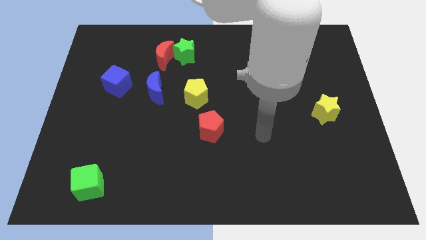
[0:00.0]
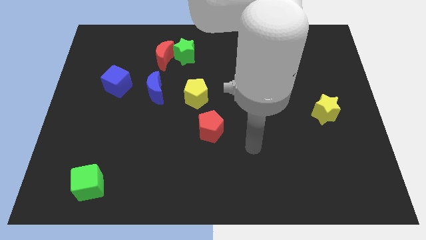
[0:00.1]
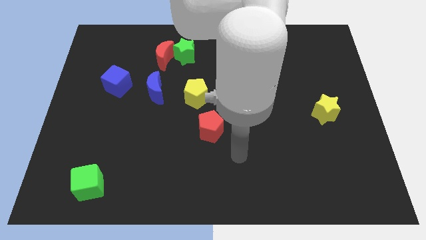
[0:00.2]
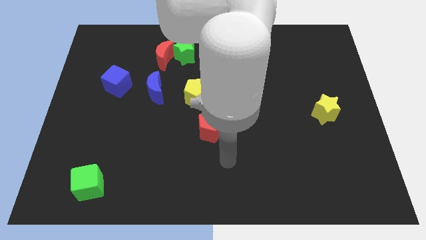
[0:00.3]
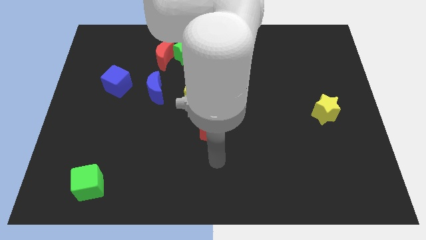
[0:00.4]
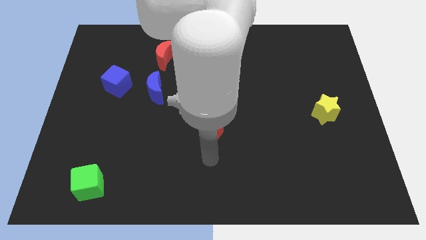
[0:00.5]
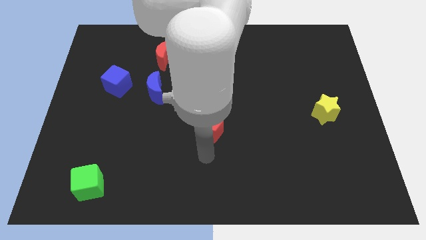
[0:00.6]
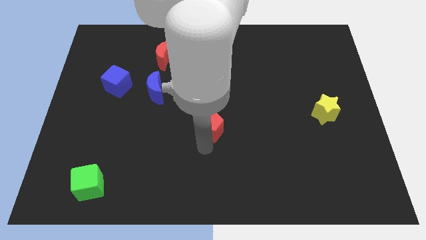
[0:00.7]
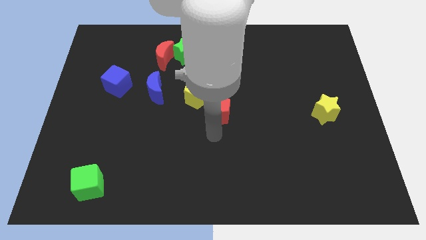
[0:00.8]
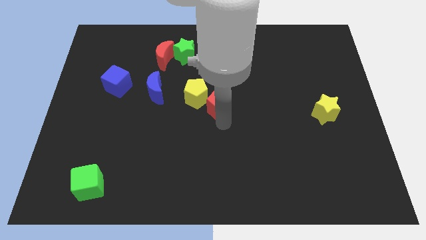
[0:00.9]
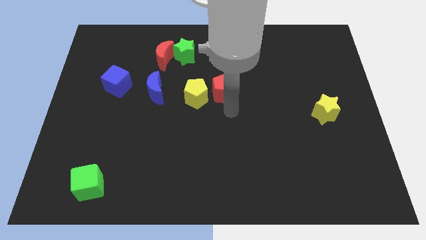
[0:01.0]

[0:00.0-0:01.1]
move the red pentagon to the right side of the yellow pentagon

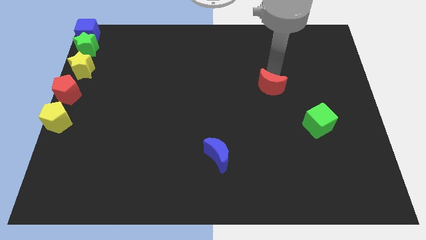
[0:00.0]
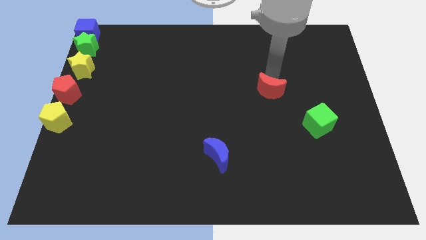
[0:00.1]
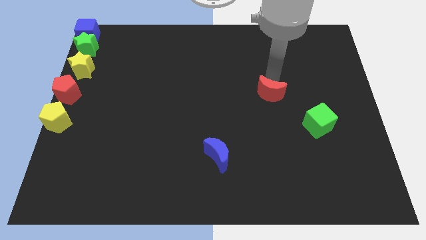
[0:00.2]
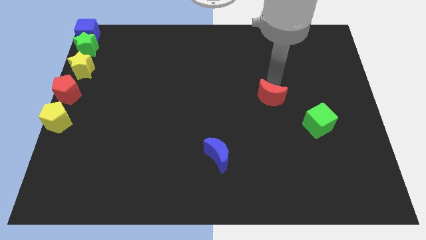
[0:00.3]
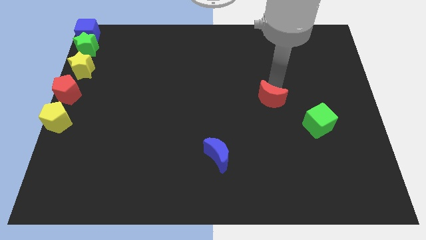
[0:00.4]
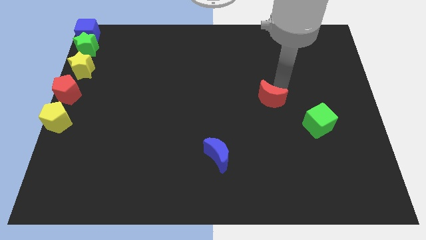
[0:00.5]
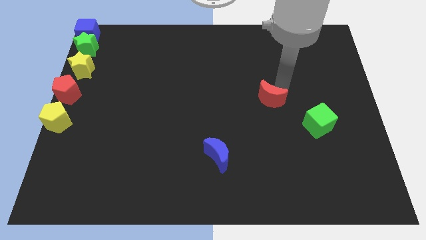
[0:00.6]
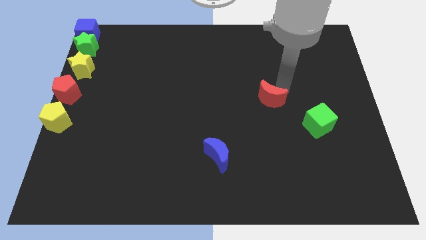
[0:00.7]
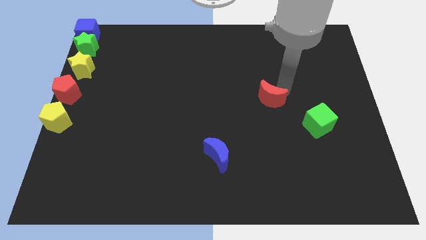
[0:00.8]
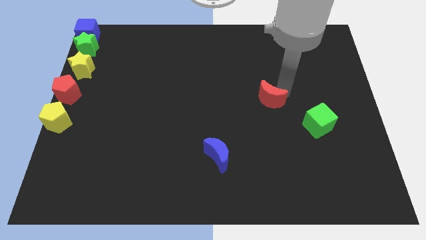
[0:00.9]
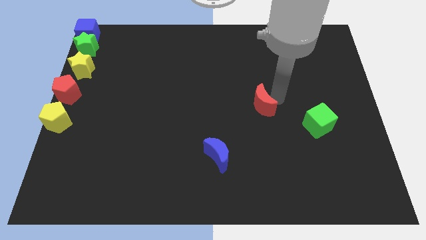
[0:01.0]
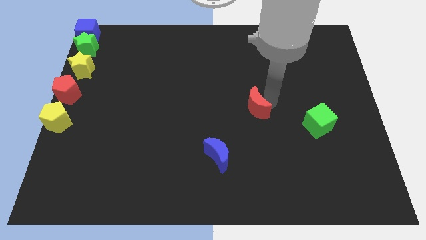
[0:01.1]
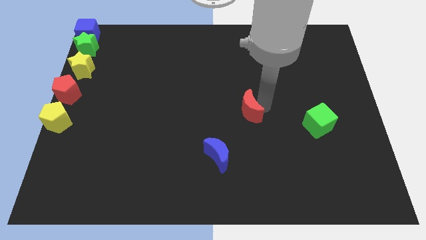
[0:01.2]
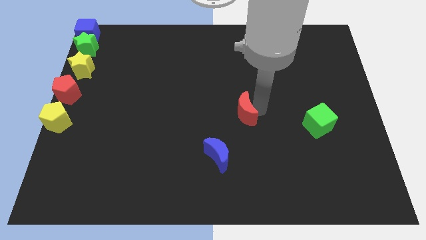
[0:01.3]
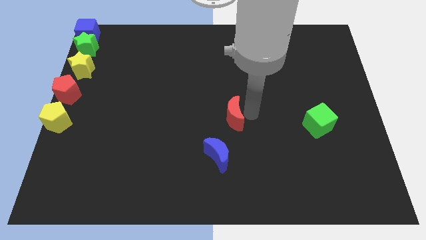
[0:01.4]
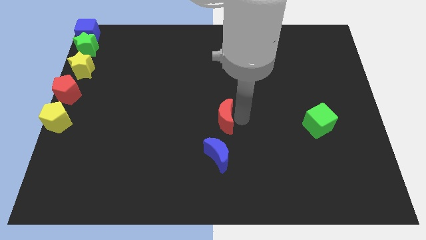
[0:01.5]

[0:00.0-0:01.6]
push the red moon towards the center

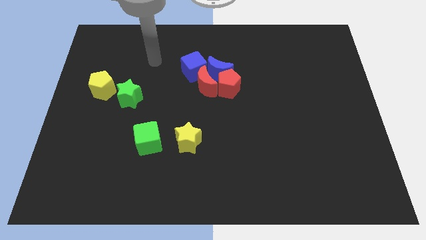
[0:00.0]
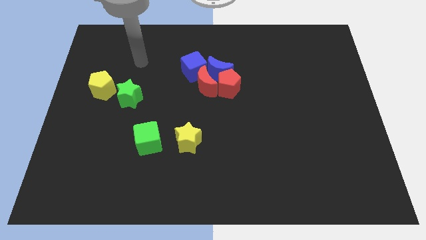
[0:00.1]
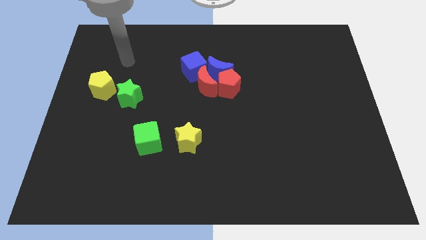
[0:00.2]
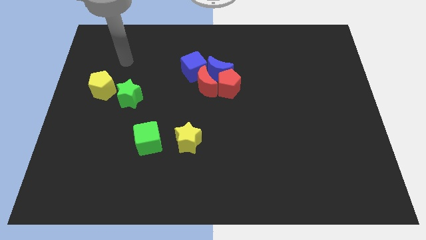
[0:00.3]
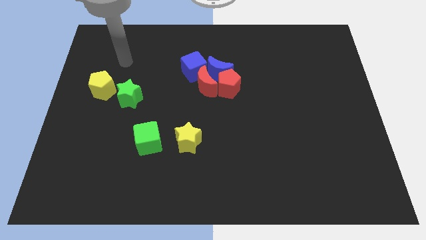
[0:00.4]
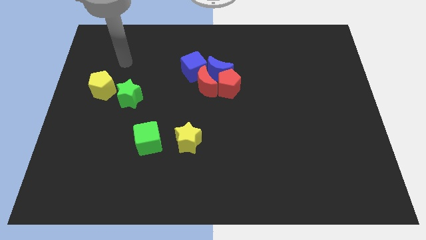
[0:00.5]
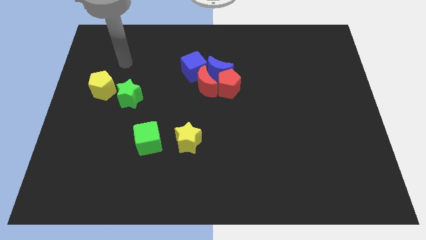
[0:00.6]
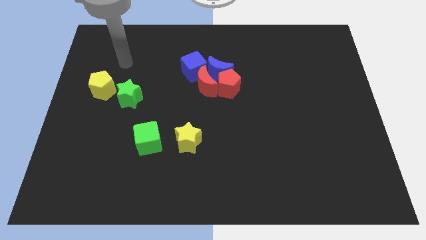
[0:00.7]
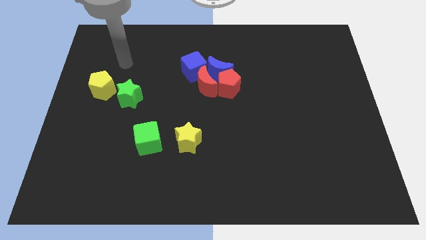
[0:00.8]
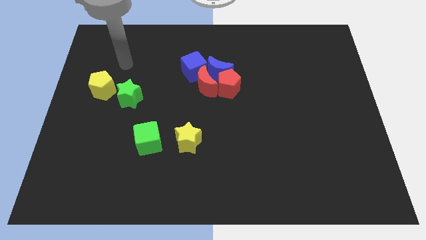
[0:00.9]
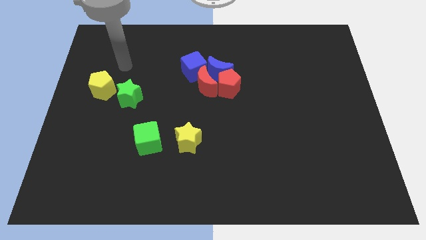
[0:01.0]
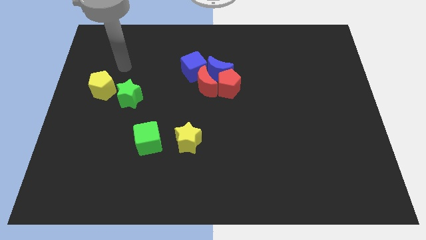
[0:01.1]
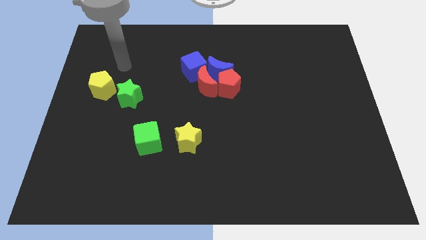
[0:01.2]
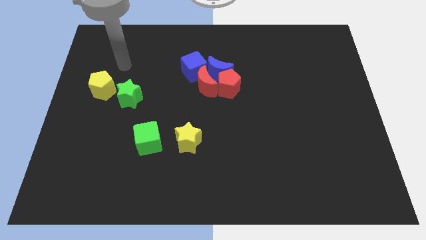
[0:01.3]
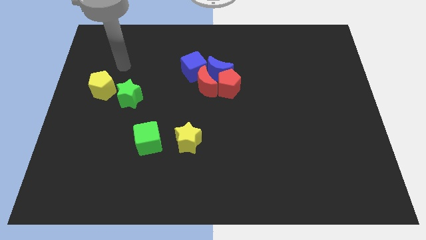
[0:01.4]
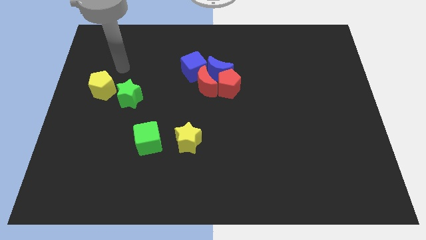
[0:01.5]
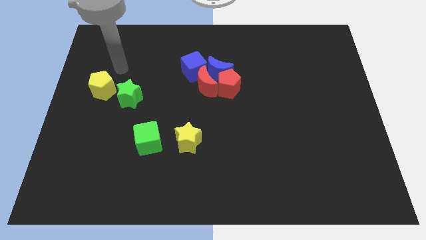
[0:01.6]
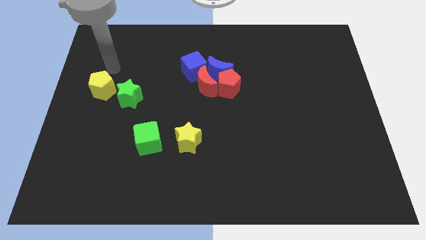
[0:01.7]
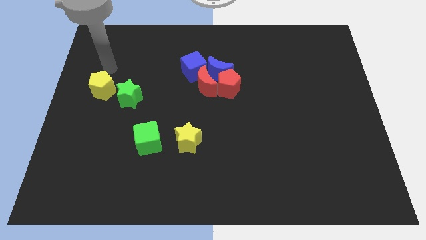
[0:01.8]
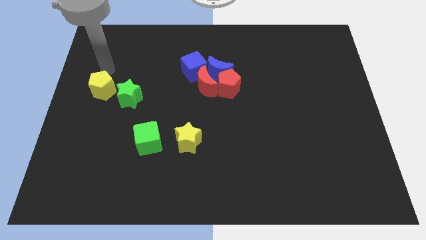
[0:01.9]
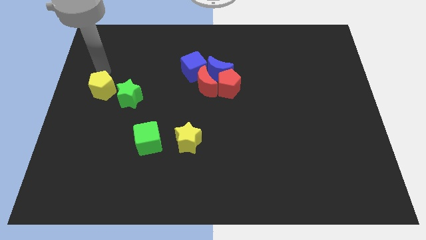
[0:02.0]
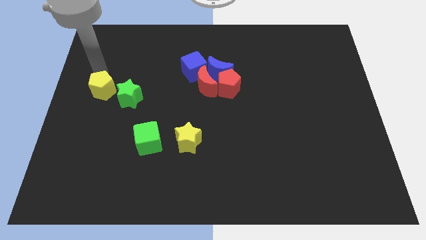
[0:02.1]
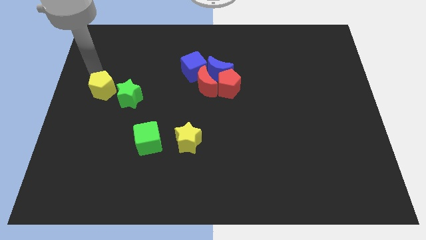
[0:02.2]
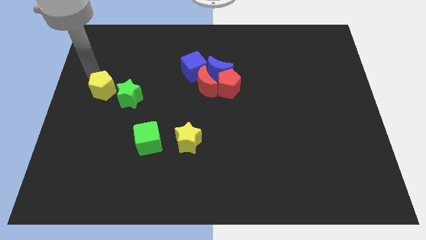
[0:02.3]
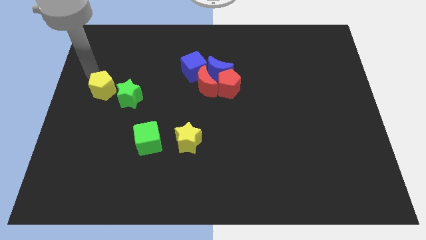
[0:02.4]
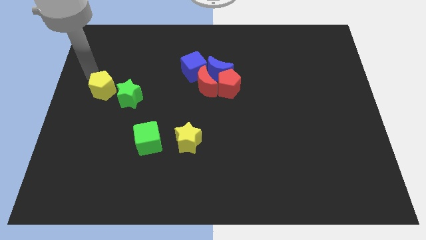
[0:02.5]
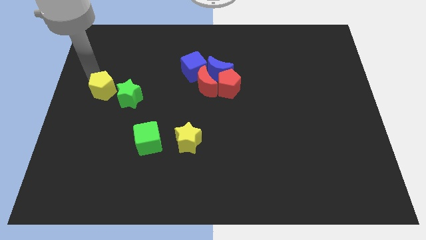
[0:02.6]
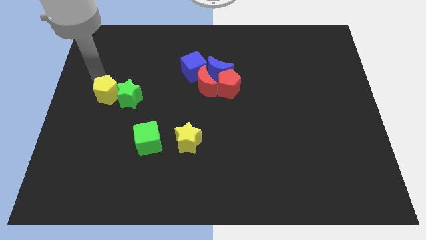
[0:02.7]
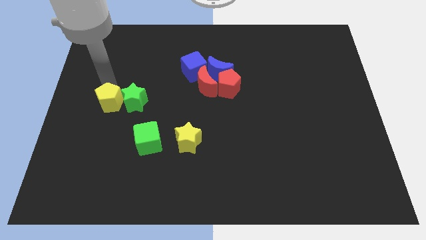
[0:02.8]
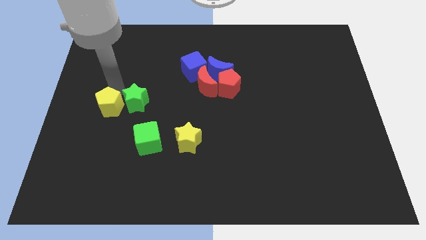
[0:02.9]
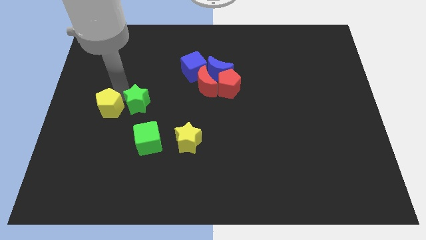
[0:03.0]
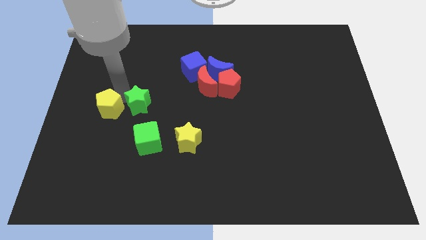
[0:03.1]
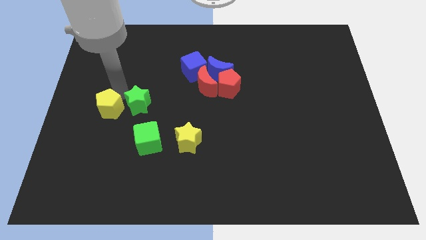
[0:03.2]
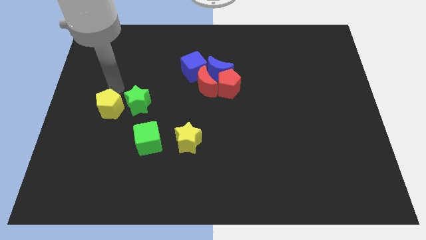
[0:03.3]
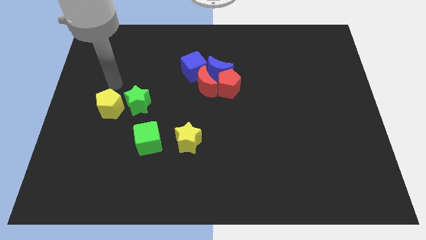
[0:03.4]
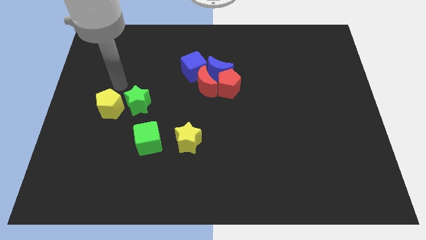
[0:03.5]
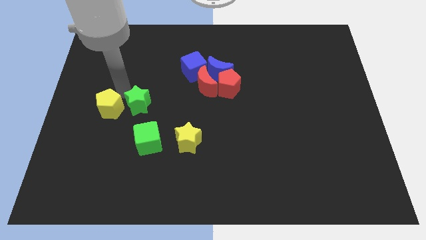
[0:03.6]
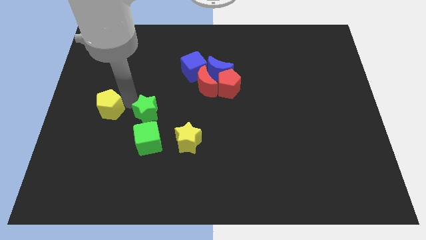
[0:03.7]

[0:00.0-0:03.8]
separate the yellow pentagon and green star

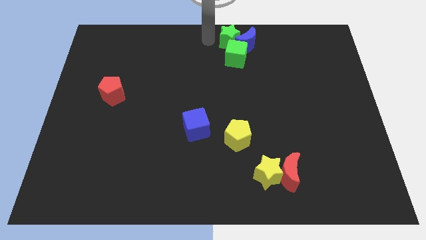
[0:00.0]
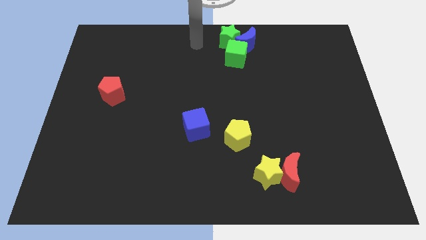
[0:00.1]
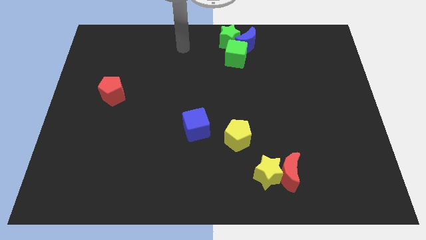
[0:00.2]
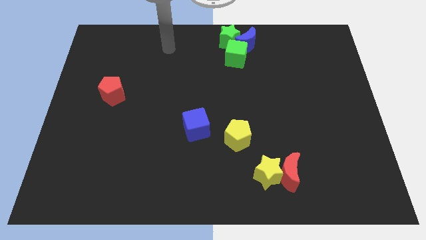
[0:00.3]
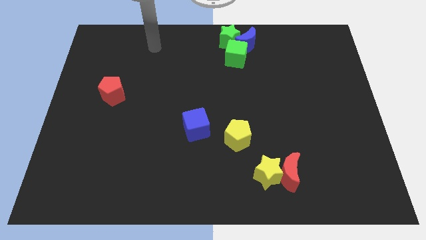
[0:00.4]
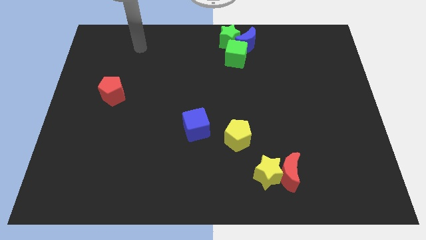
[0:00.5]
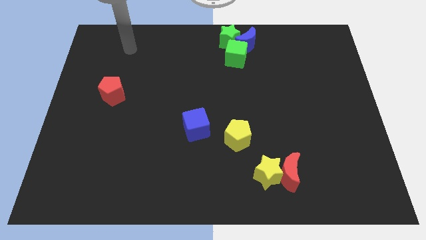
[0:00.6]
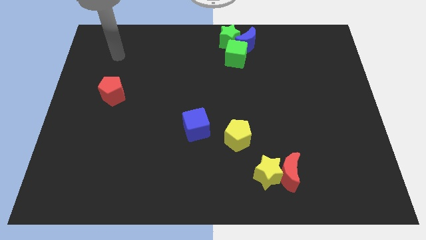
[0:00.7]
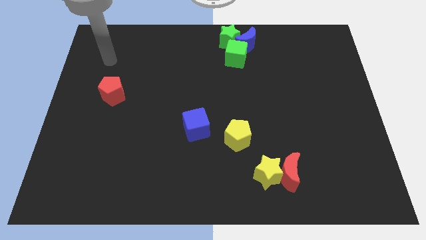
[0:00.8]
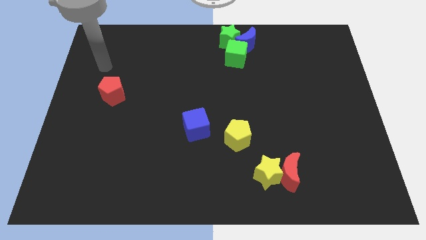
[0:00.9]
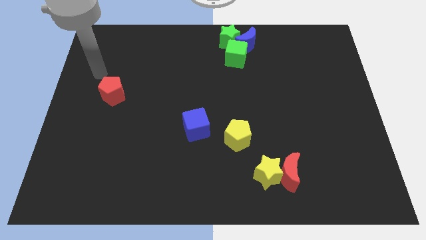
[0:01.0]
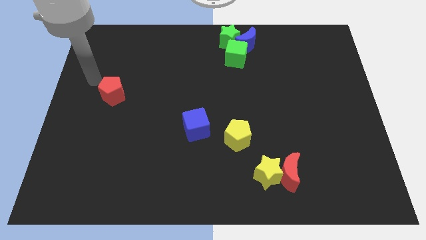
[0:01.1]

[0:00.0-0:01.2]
move your arm towards the left side of the board

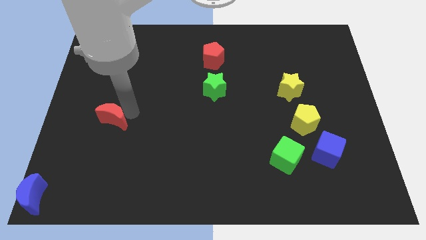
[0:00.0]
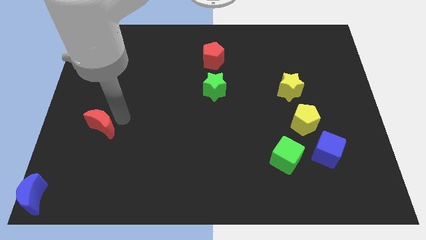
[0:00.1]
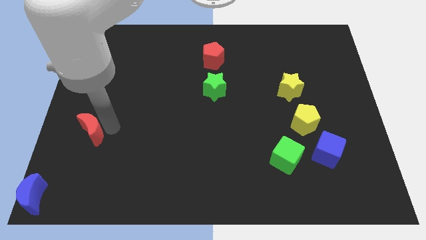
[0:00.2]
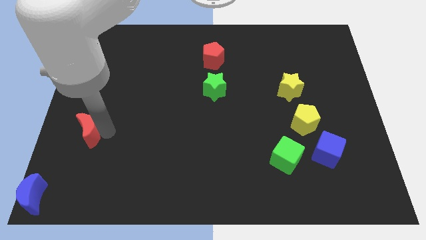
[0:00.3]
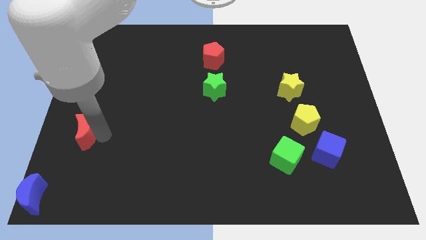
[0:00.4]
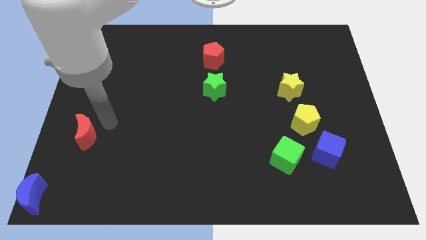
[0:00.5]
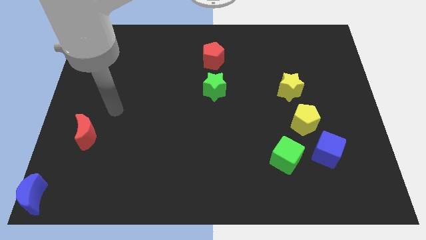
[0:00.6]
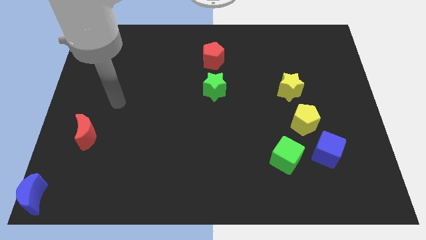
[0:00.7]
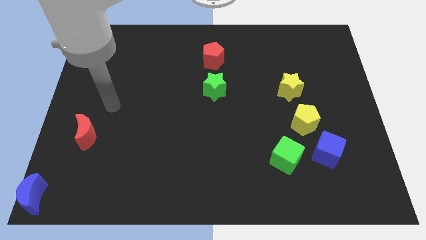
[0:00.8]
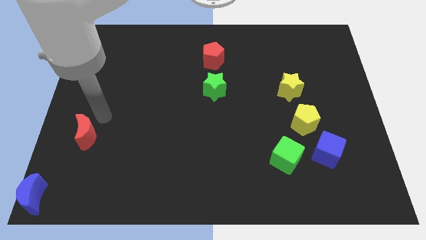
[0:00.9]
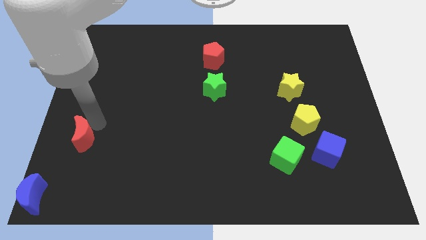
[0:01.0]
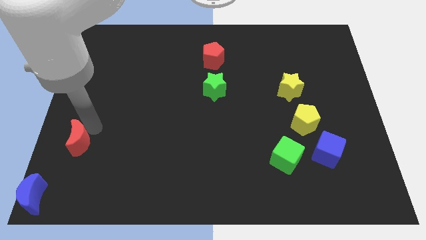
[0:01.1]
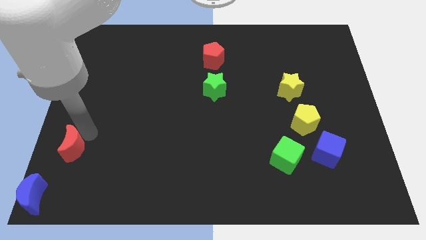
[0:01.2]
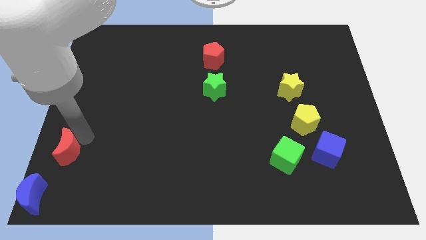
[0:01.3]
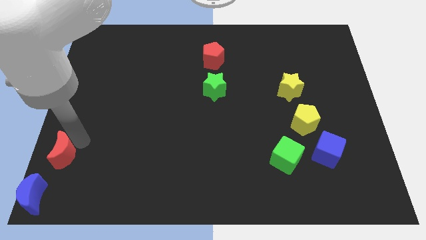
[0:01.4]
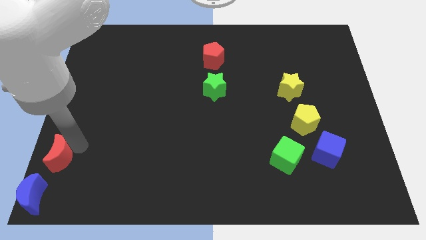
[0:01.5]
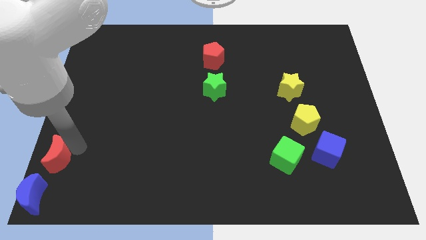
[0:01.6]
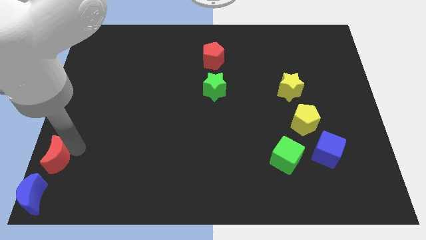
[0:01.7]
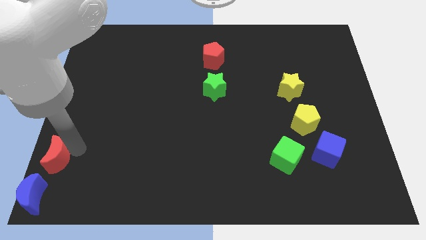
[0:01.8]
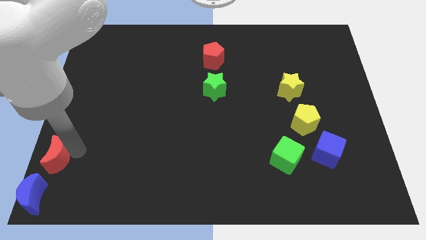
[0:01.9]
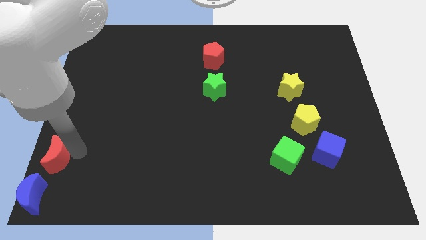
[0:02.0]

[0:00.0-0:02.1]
push red moon towards blue moon
